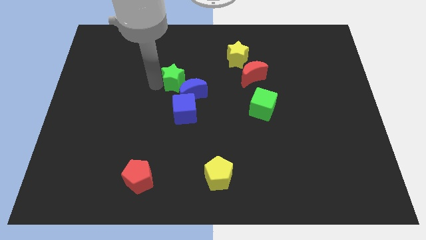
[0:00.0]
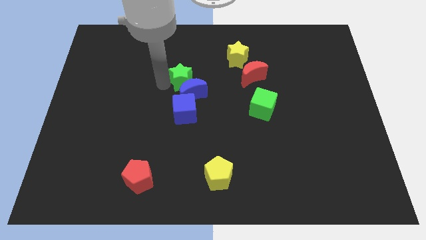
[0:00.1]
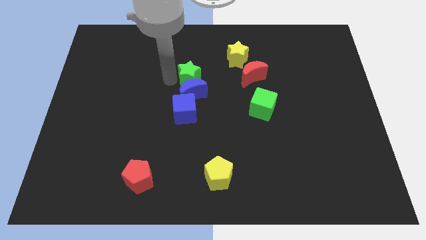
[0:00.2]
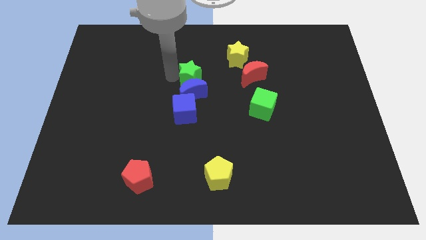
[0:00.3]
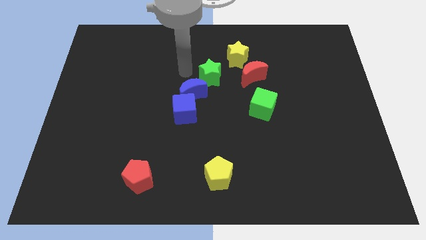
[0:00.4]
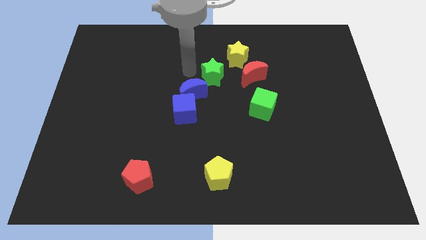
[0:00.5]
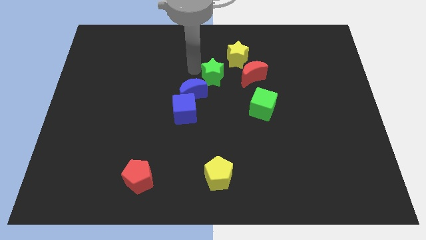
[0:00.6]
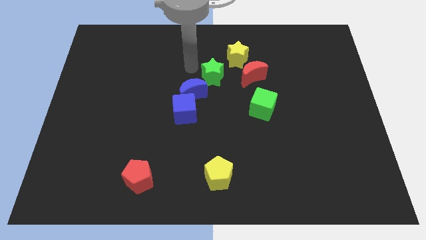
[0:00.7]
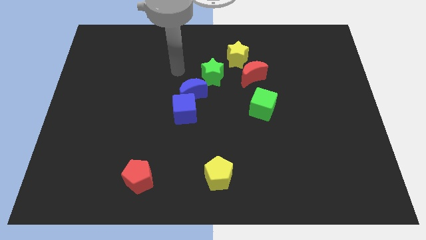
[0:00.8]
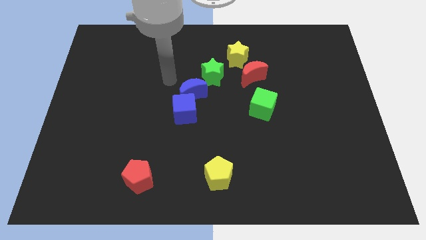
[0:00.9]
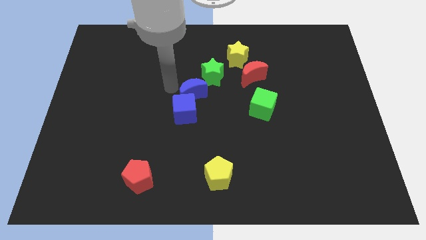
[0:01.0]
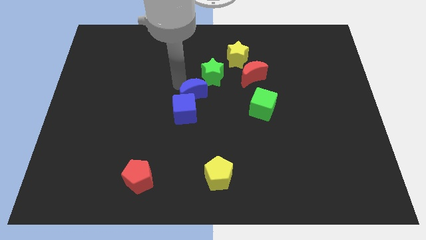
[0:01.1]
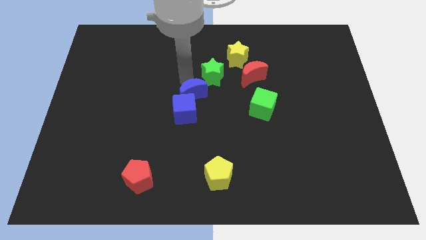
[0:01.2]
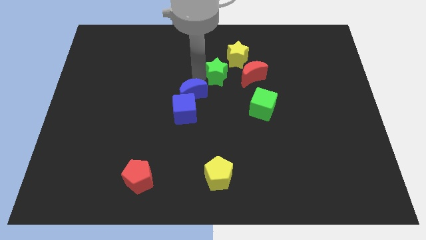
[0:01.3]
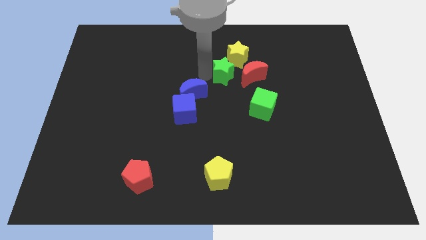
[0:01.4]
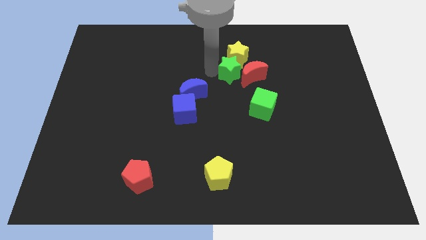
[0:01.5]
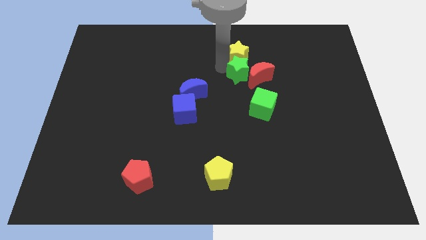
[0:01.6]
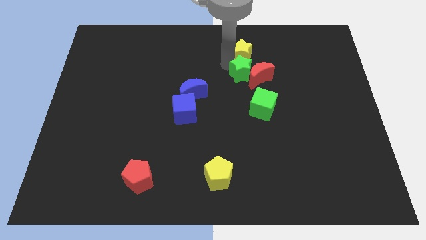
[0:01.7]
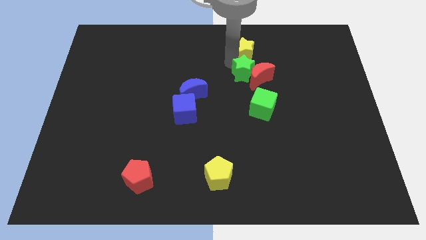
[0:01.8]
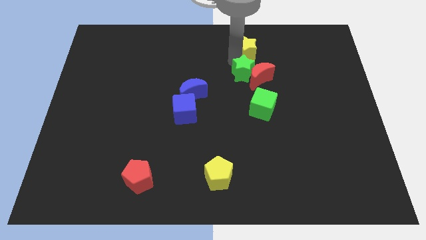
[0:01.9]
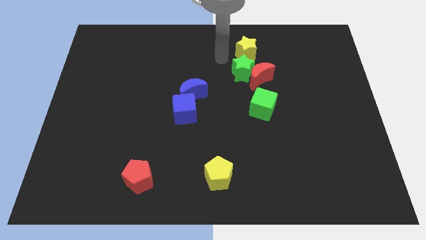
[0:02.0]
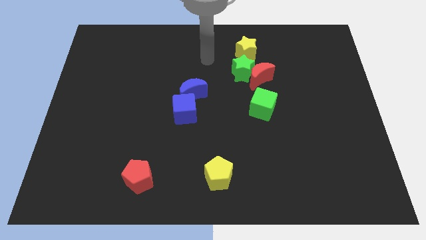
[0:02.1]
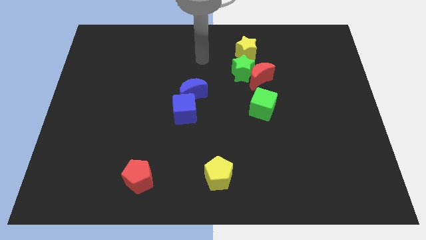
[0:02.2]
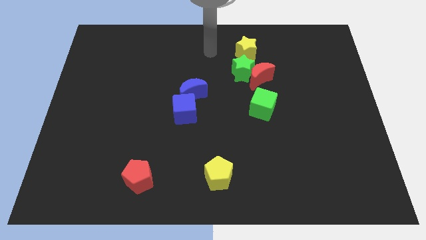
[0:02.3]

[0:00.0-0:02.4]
push the green star into the red moon

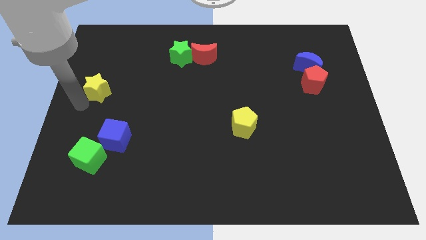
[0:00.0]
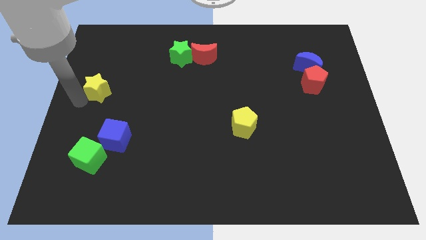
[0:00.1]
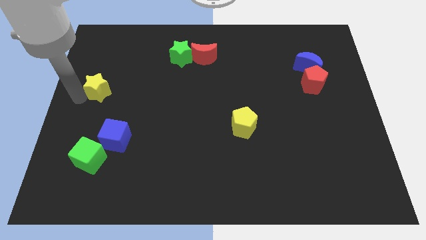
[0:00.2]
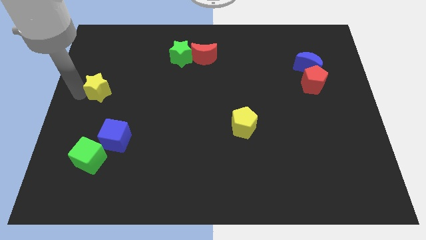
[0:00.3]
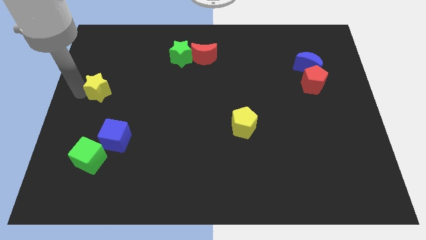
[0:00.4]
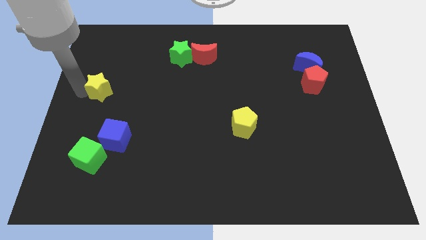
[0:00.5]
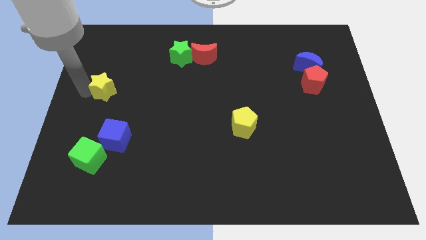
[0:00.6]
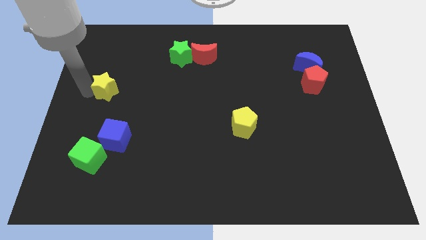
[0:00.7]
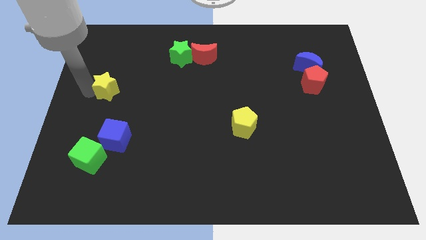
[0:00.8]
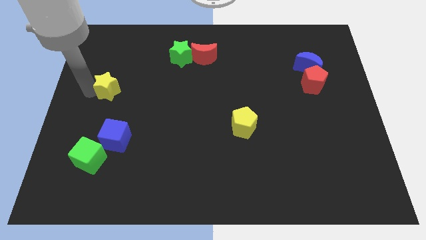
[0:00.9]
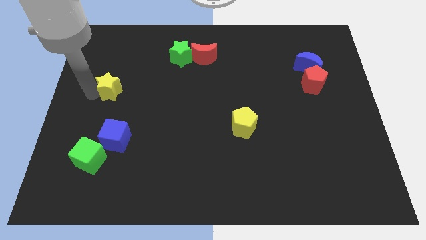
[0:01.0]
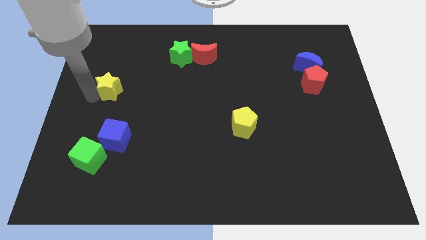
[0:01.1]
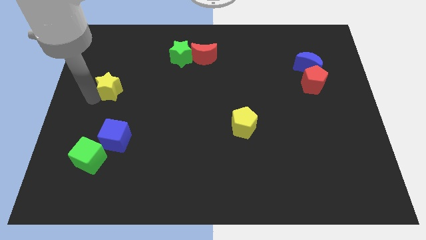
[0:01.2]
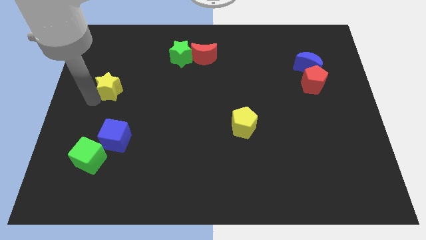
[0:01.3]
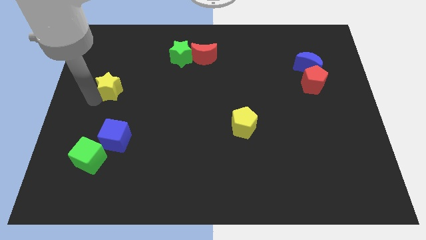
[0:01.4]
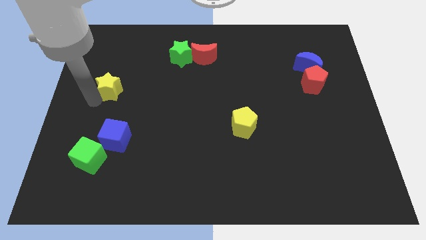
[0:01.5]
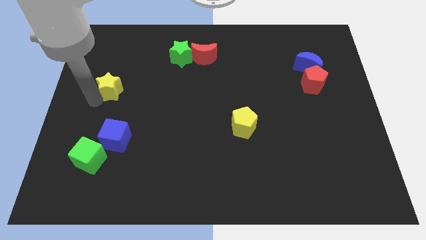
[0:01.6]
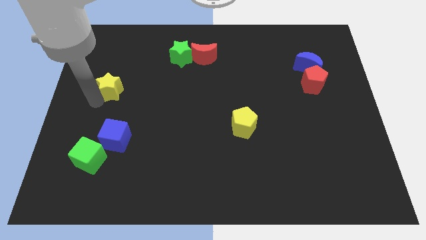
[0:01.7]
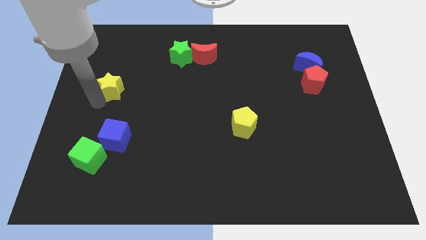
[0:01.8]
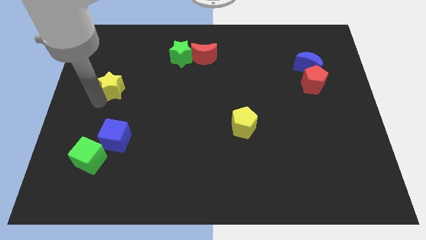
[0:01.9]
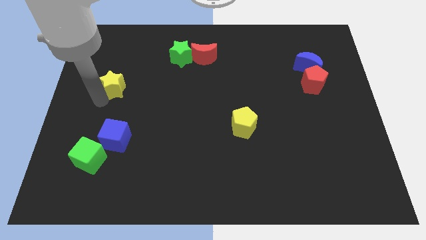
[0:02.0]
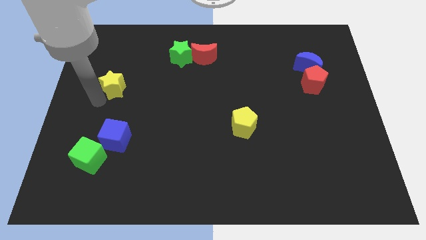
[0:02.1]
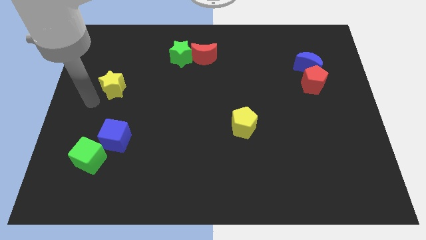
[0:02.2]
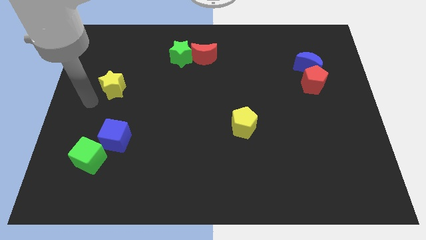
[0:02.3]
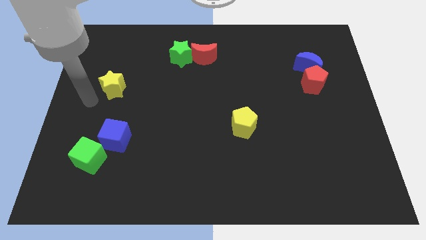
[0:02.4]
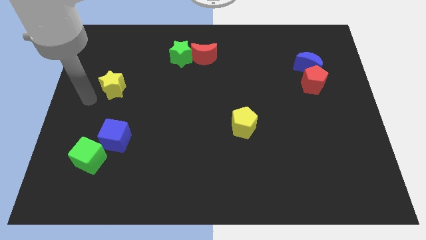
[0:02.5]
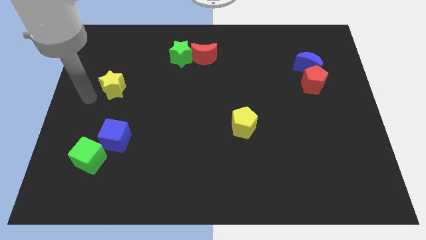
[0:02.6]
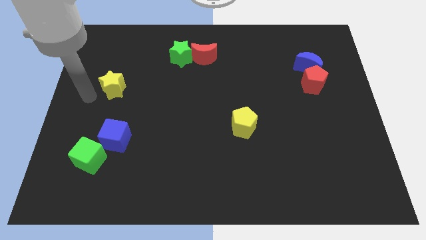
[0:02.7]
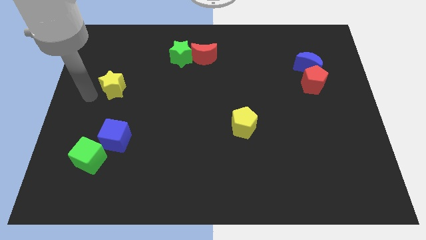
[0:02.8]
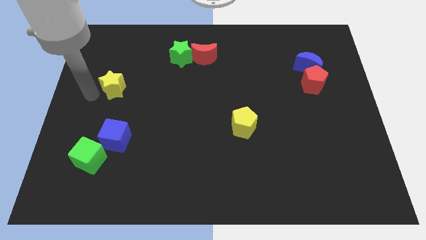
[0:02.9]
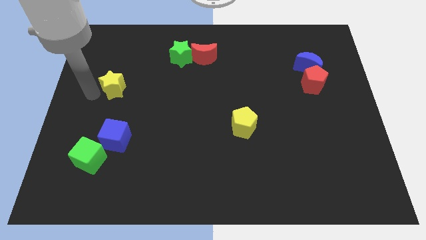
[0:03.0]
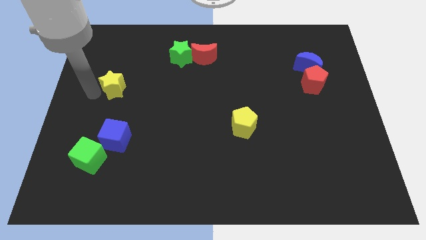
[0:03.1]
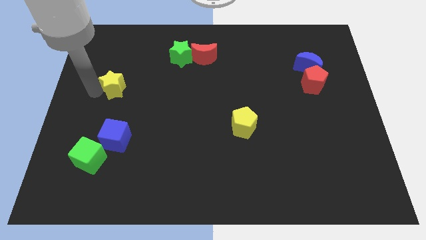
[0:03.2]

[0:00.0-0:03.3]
move the yellow star above the blue cube

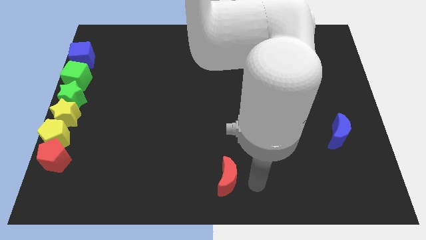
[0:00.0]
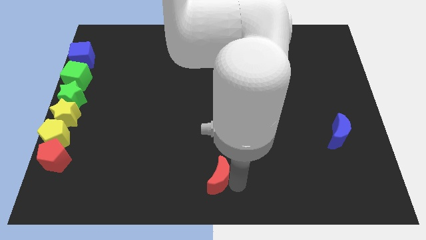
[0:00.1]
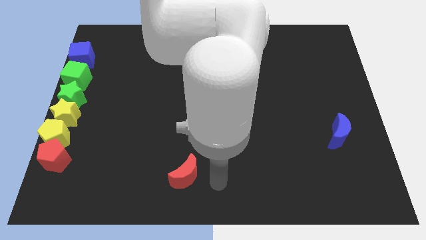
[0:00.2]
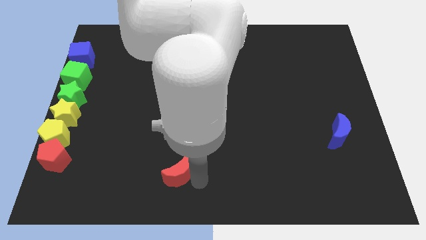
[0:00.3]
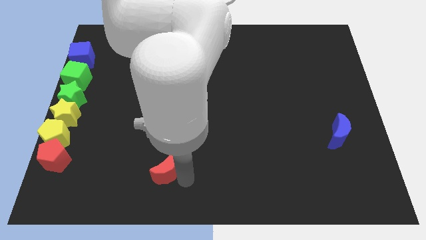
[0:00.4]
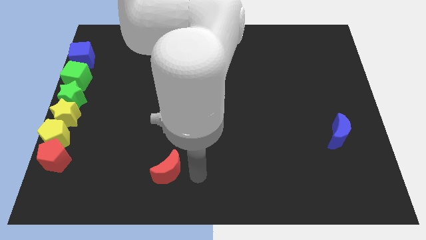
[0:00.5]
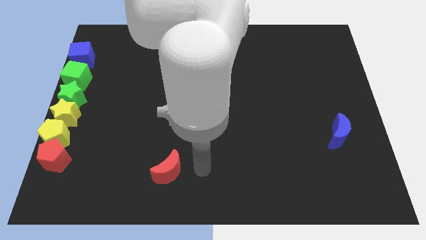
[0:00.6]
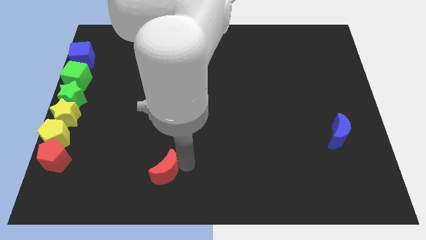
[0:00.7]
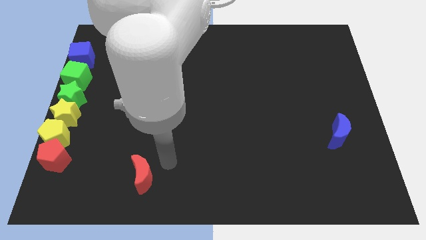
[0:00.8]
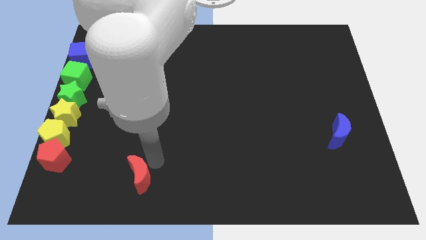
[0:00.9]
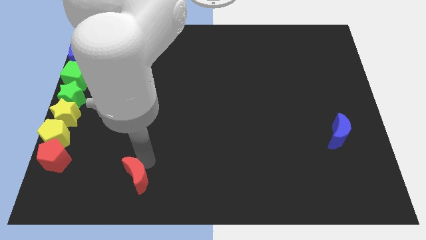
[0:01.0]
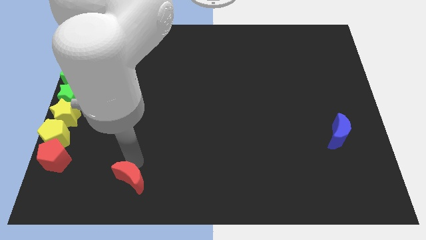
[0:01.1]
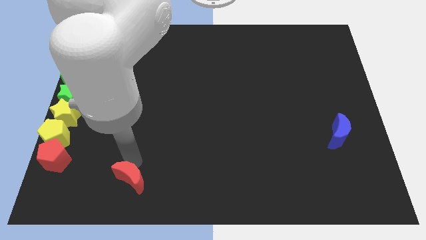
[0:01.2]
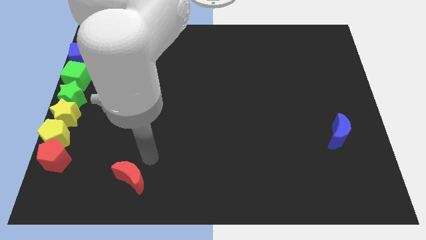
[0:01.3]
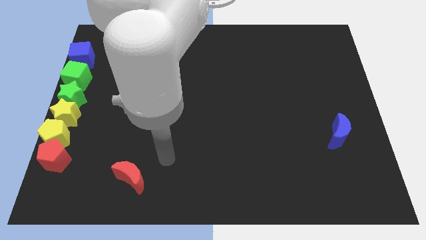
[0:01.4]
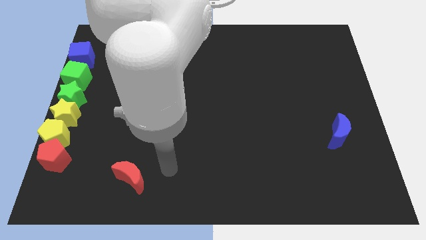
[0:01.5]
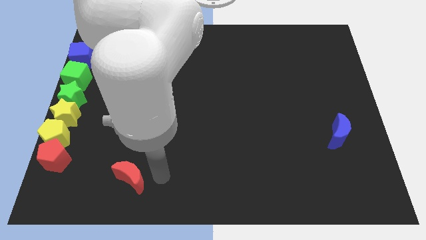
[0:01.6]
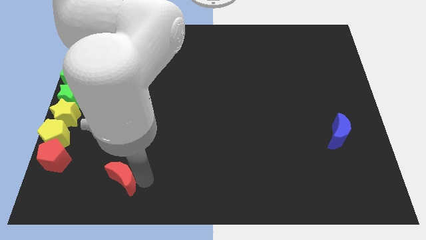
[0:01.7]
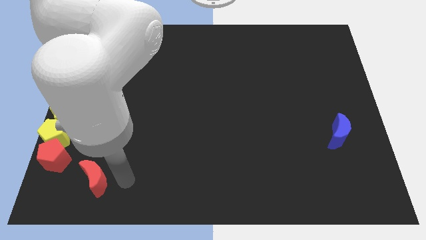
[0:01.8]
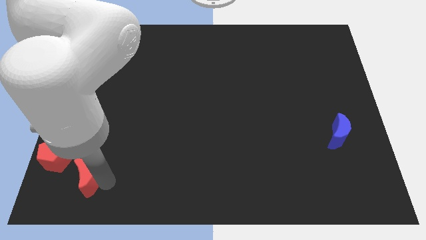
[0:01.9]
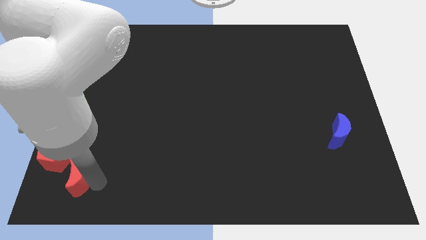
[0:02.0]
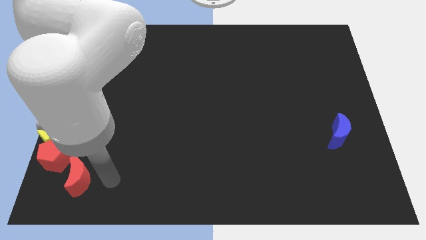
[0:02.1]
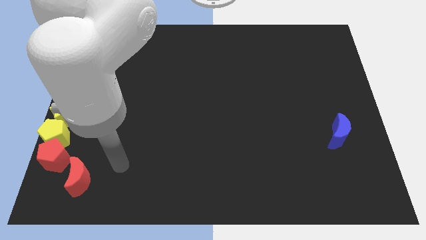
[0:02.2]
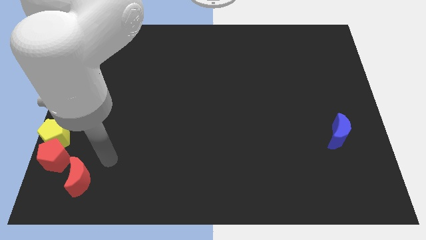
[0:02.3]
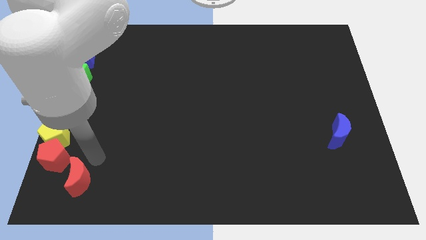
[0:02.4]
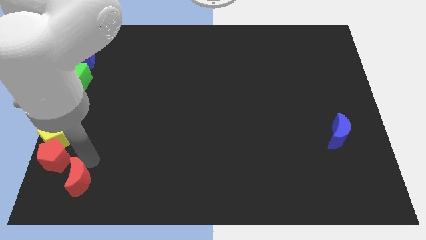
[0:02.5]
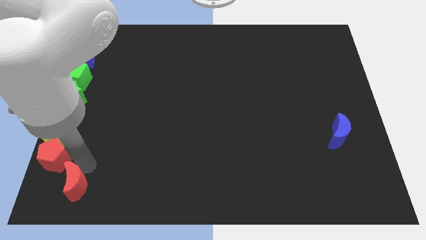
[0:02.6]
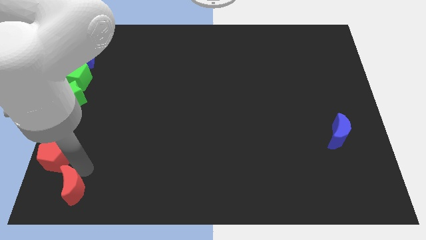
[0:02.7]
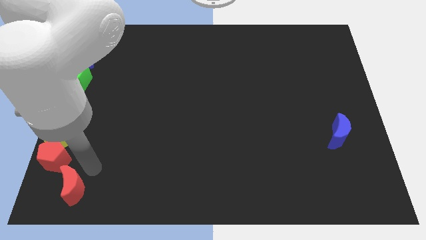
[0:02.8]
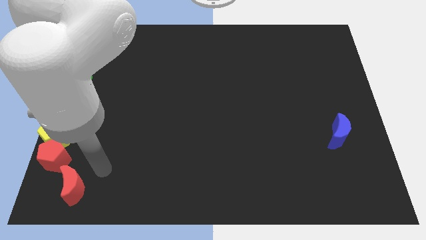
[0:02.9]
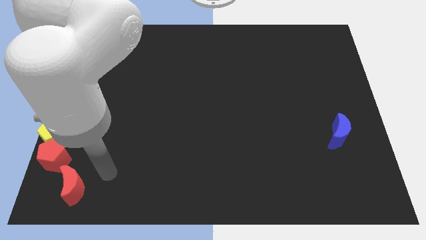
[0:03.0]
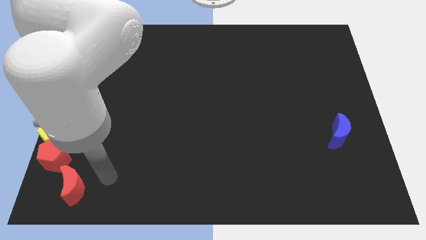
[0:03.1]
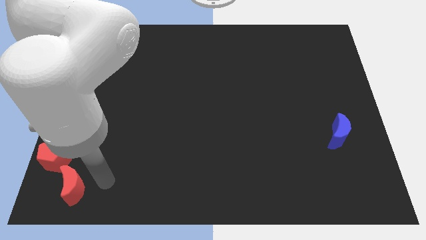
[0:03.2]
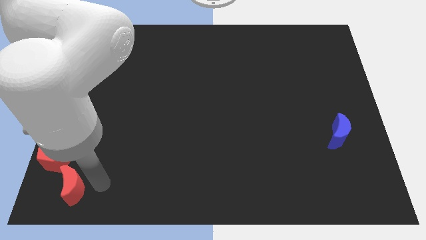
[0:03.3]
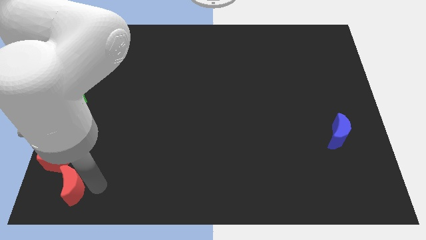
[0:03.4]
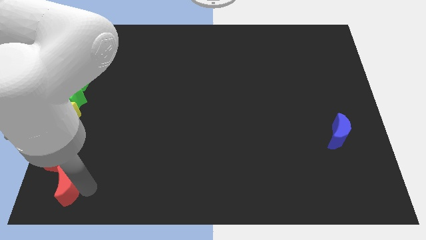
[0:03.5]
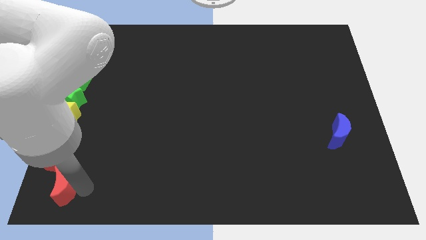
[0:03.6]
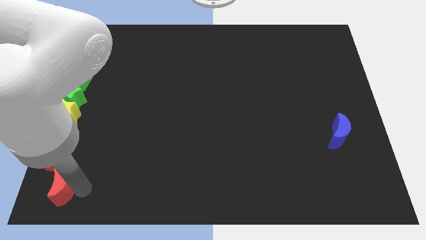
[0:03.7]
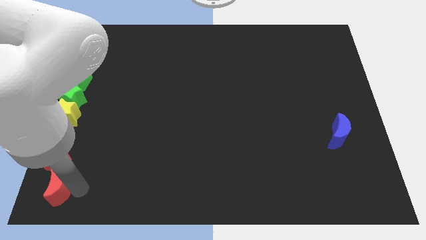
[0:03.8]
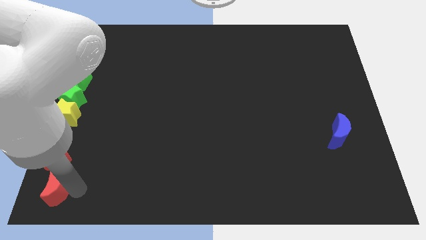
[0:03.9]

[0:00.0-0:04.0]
push the red crescent to the bottom of red pentagon
